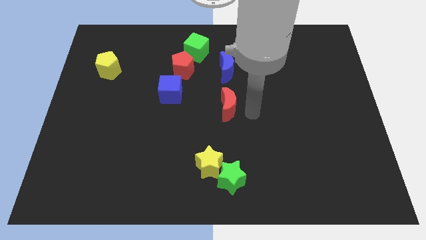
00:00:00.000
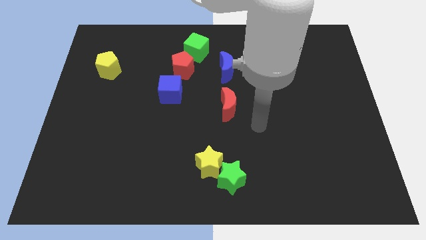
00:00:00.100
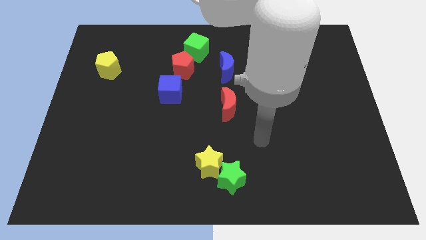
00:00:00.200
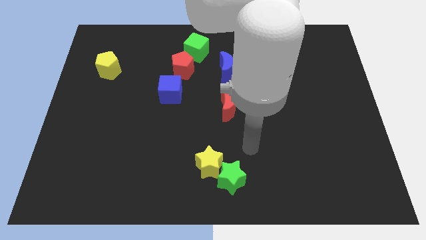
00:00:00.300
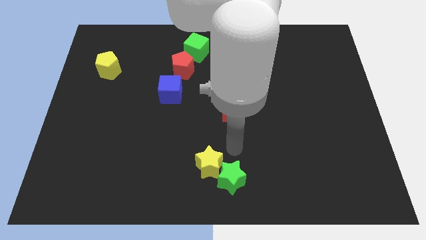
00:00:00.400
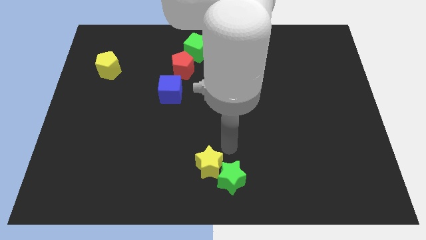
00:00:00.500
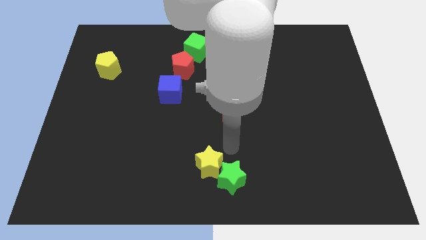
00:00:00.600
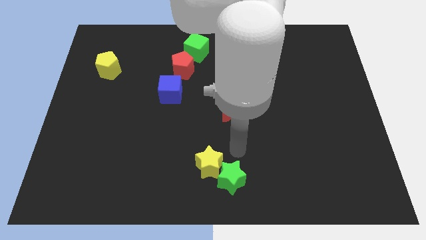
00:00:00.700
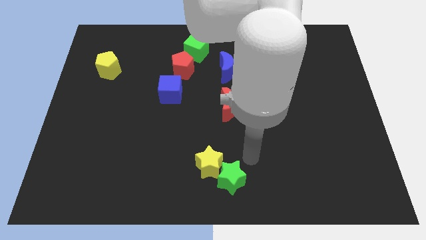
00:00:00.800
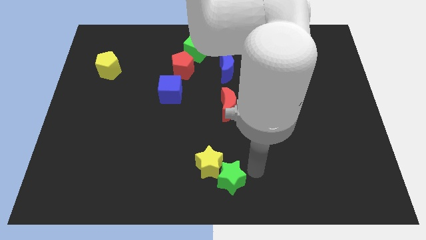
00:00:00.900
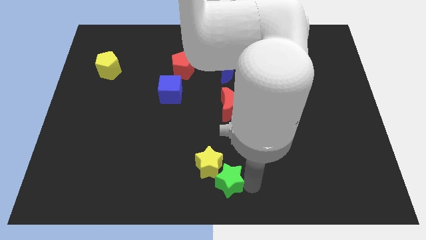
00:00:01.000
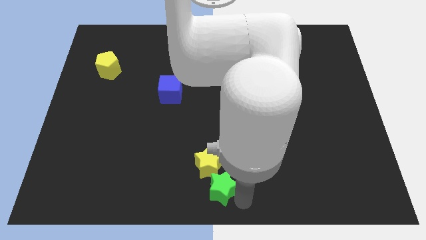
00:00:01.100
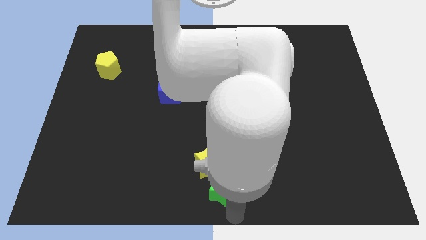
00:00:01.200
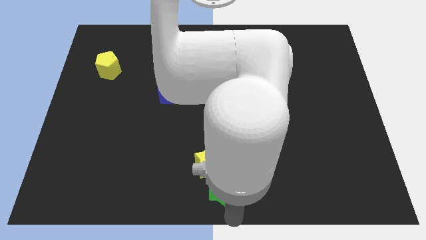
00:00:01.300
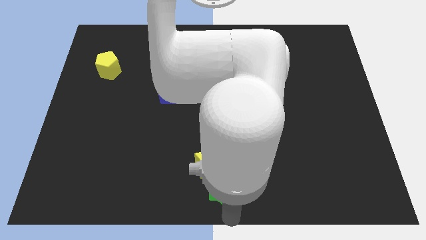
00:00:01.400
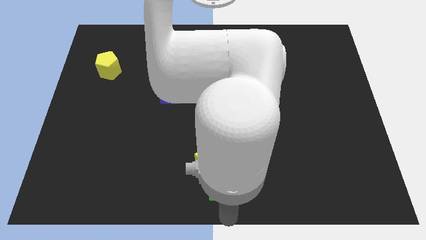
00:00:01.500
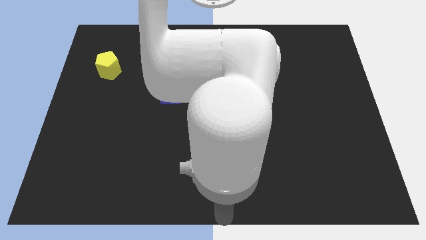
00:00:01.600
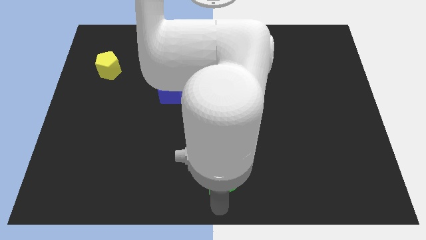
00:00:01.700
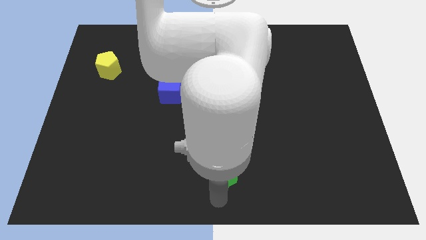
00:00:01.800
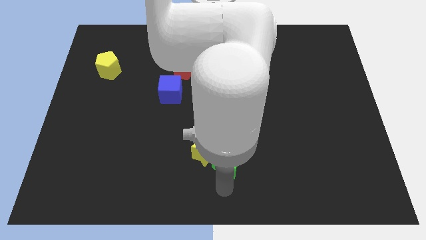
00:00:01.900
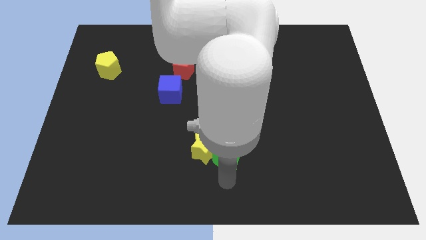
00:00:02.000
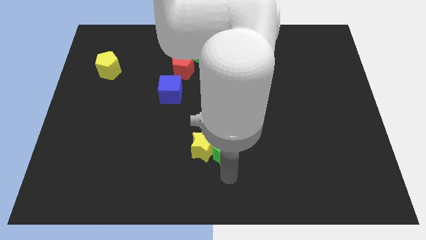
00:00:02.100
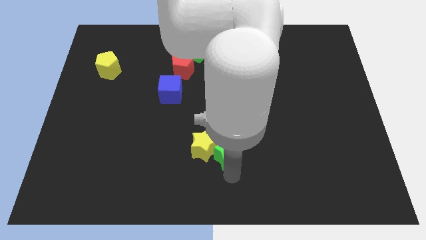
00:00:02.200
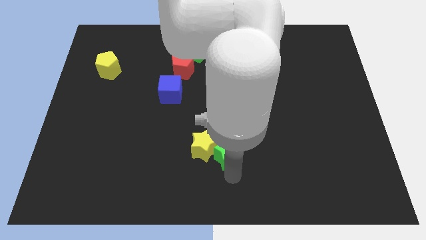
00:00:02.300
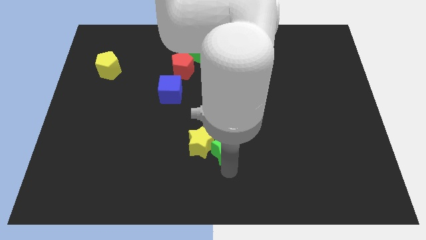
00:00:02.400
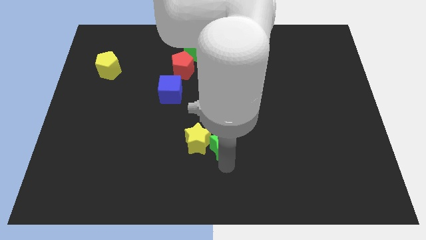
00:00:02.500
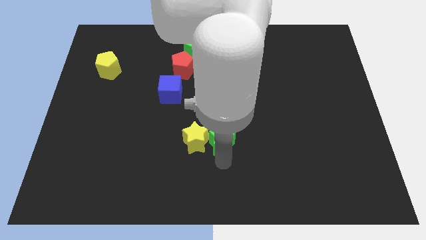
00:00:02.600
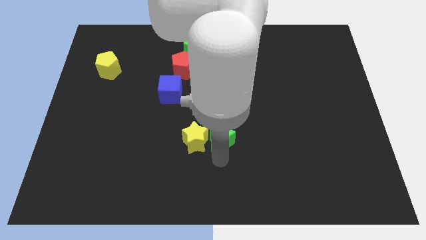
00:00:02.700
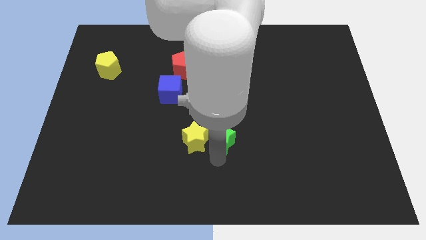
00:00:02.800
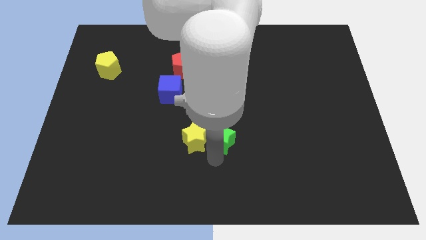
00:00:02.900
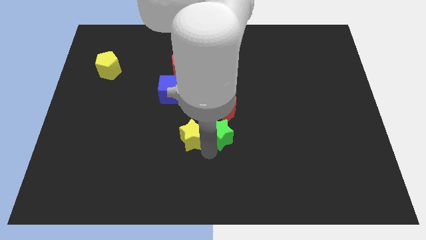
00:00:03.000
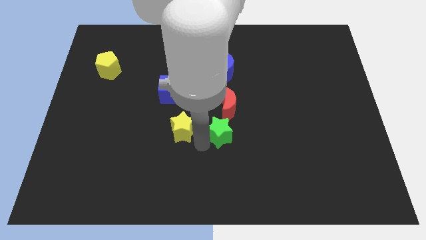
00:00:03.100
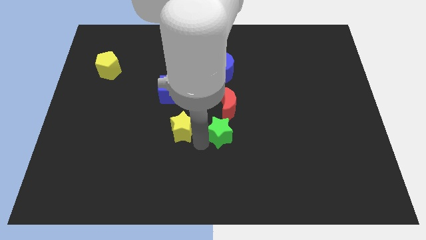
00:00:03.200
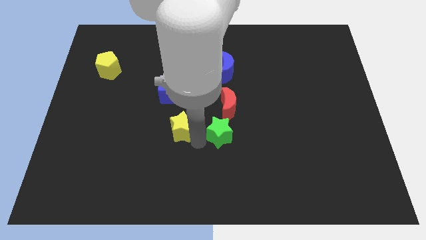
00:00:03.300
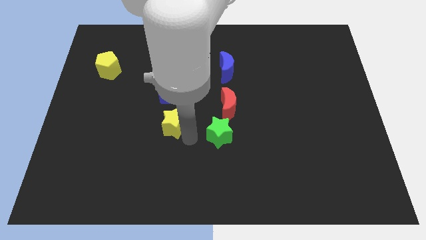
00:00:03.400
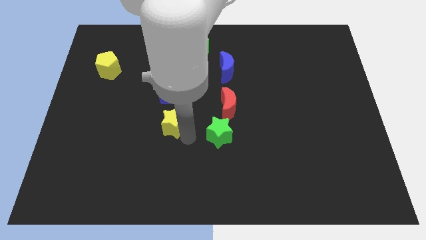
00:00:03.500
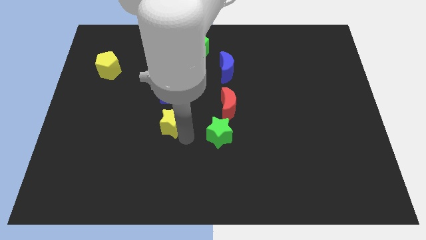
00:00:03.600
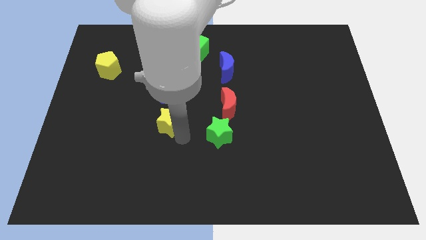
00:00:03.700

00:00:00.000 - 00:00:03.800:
push the yellow star to the bottom side of the blue cube

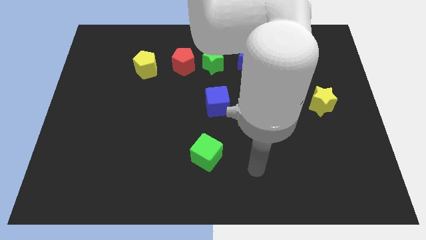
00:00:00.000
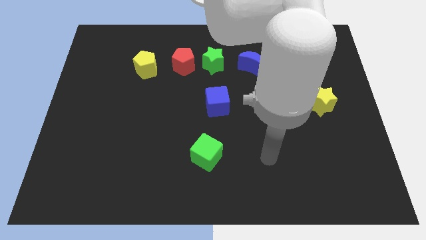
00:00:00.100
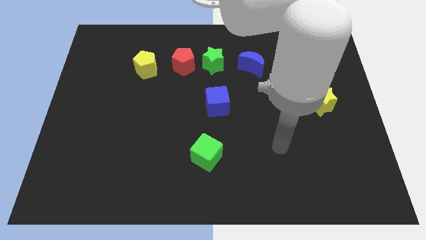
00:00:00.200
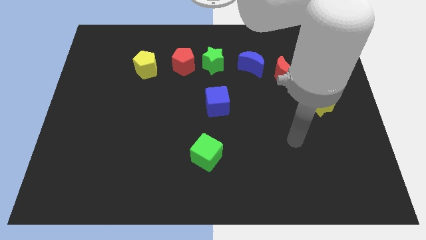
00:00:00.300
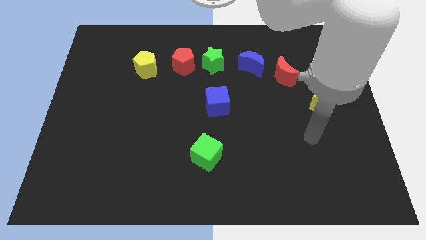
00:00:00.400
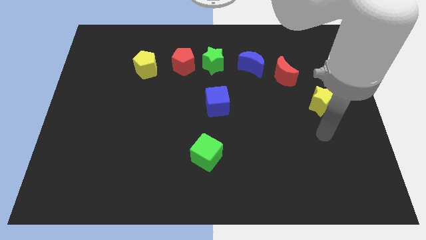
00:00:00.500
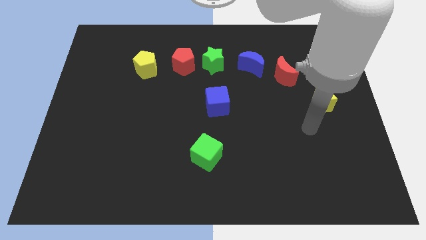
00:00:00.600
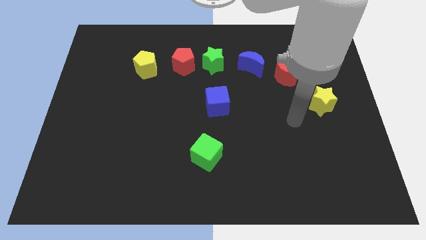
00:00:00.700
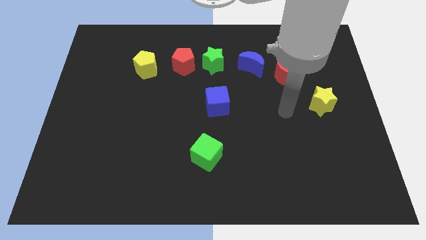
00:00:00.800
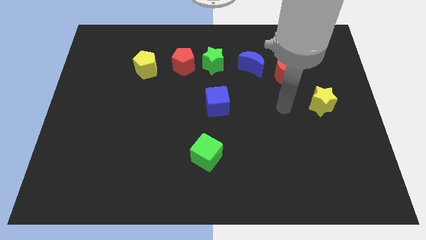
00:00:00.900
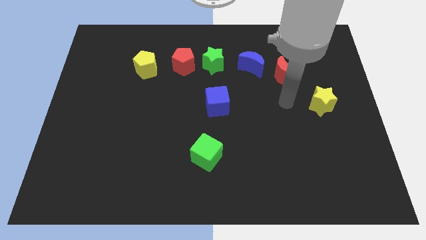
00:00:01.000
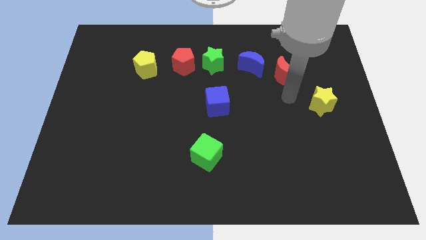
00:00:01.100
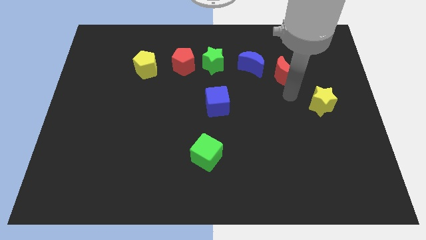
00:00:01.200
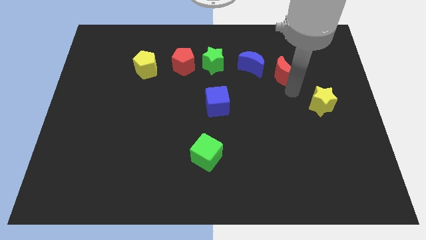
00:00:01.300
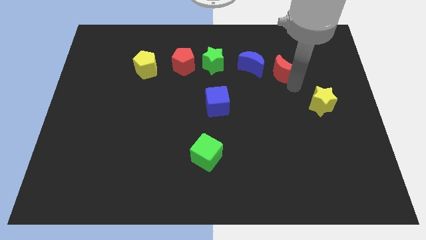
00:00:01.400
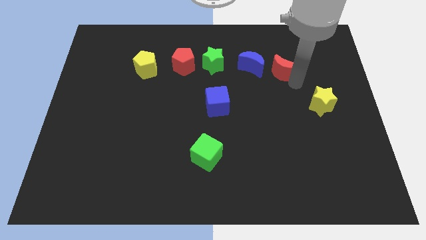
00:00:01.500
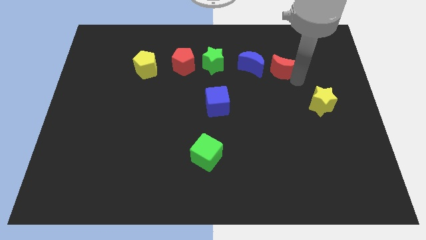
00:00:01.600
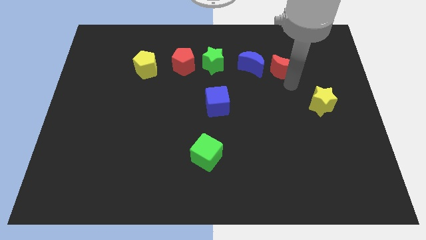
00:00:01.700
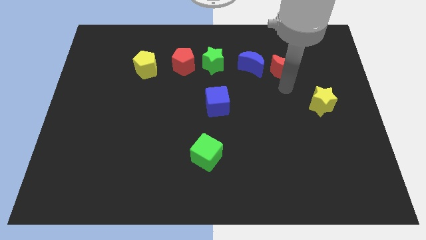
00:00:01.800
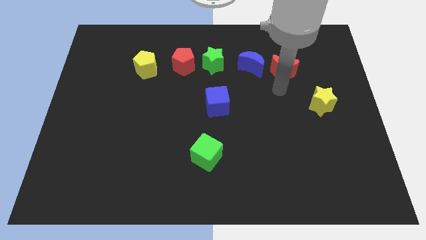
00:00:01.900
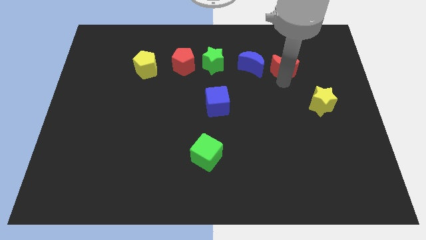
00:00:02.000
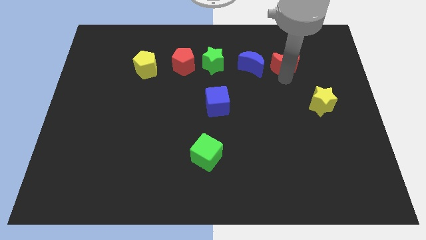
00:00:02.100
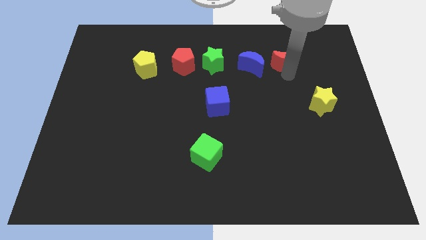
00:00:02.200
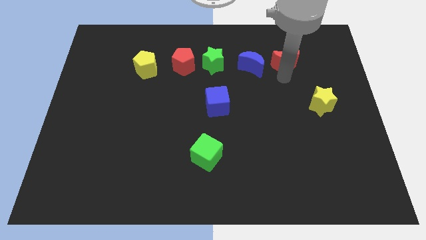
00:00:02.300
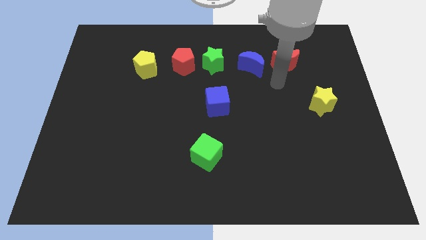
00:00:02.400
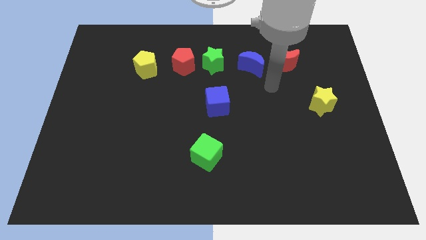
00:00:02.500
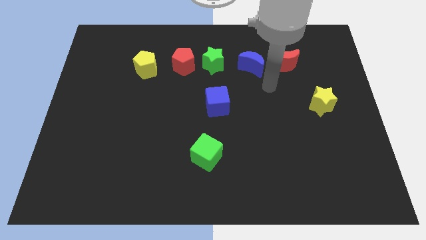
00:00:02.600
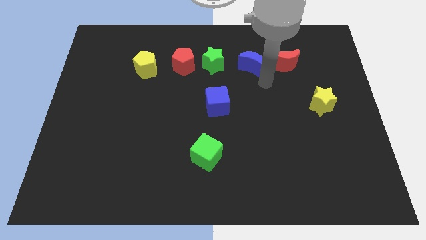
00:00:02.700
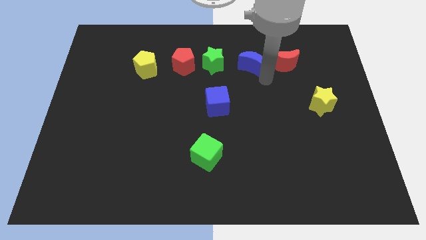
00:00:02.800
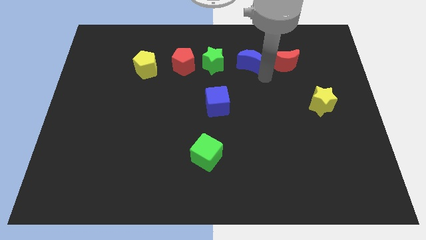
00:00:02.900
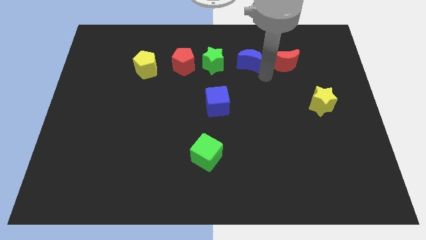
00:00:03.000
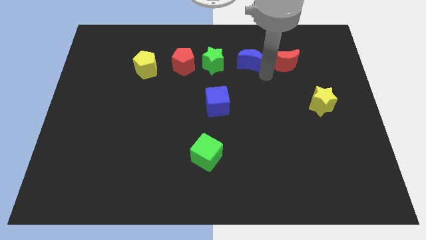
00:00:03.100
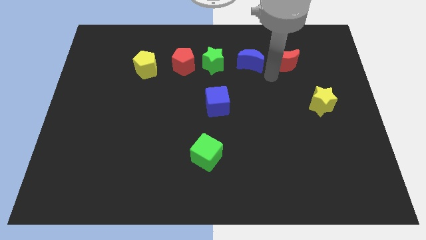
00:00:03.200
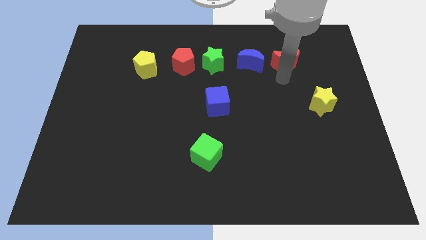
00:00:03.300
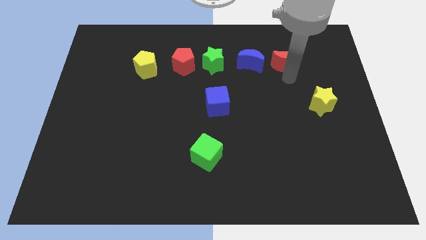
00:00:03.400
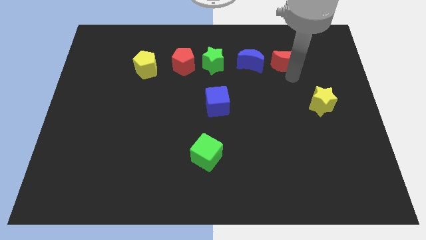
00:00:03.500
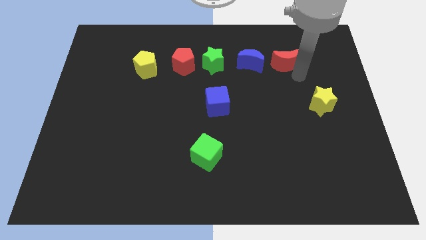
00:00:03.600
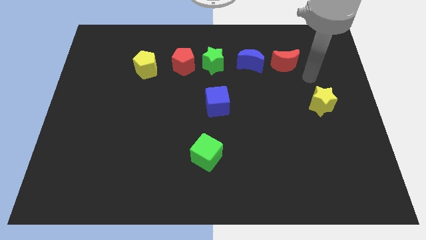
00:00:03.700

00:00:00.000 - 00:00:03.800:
place the red crescent to the right side of the blue crescent

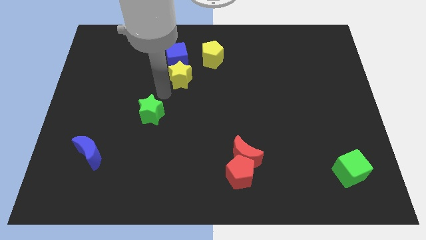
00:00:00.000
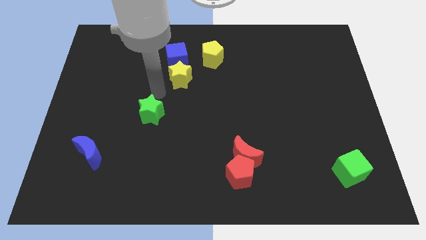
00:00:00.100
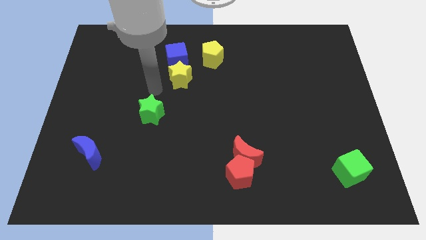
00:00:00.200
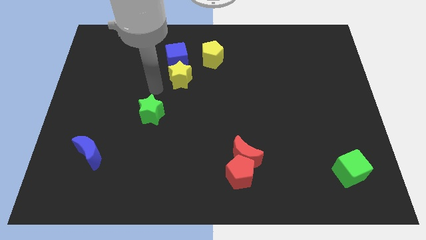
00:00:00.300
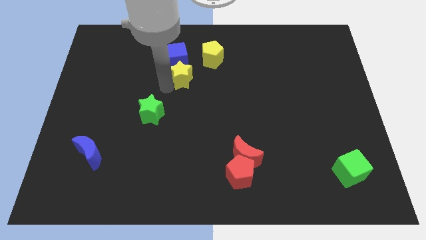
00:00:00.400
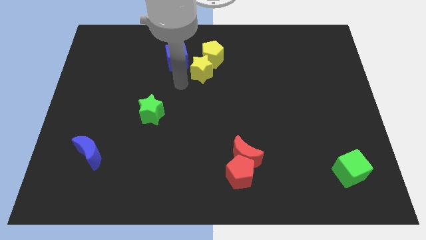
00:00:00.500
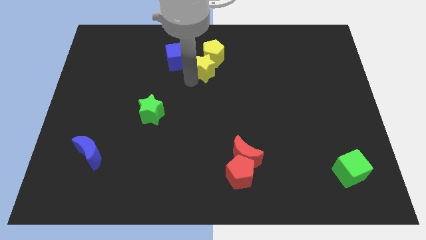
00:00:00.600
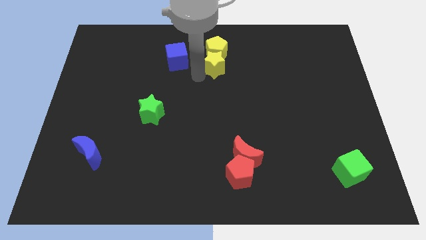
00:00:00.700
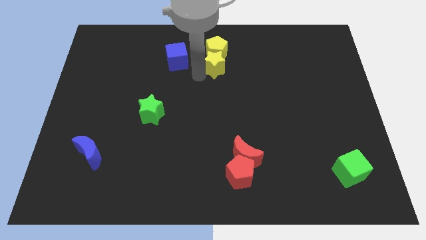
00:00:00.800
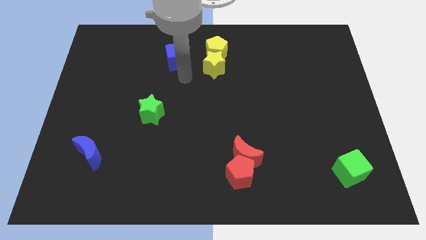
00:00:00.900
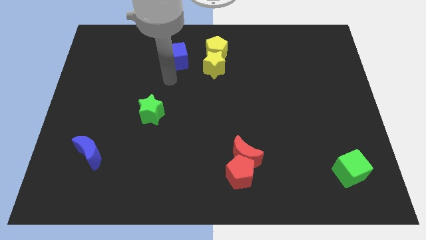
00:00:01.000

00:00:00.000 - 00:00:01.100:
move the yellow pentagon with the yellow star

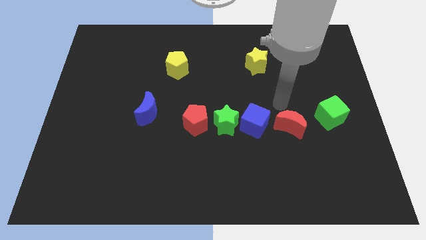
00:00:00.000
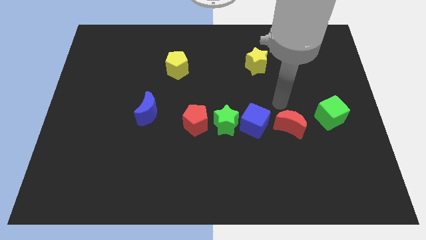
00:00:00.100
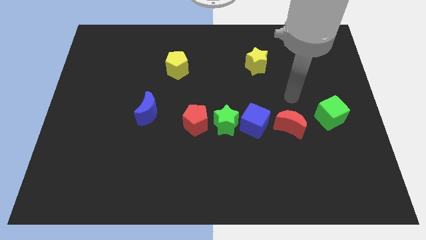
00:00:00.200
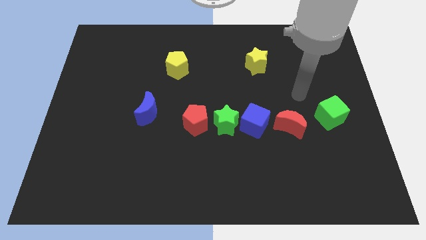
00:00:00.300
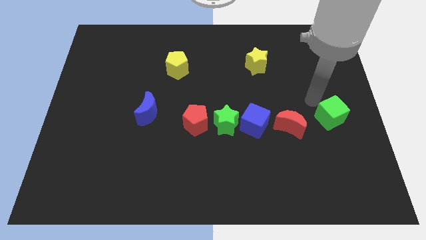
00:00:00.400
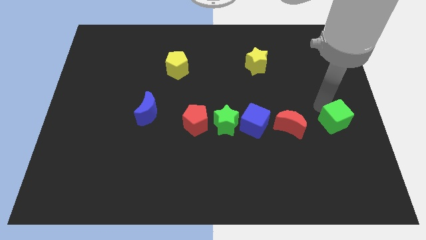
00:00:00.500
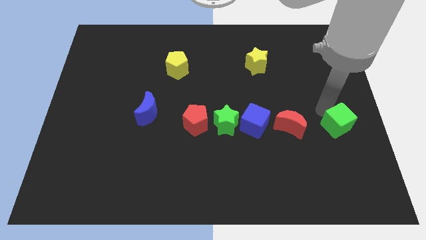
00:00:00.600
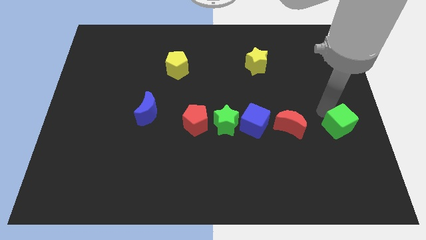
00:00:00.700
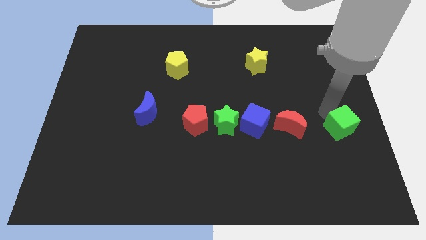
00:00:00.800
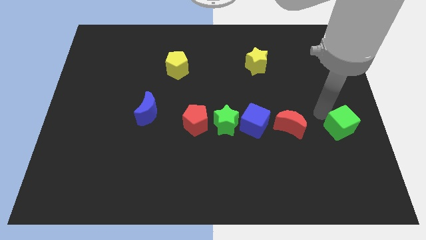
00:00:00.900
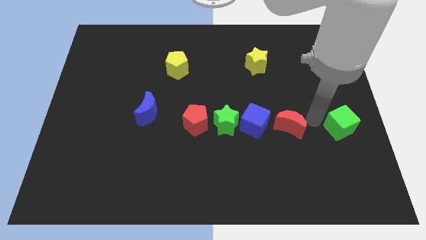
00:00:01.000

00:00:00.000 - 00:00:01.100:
adjust the green cube to the right side of the red moon
